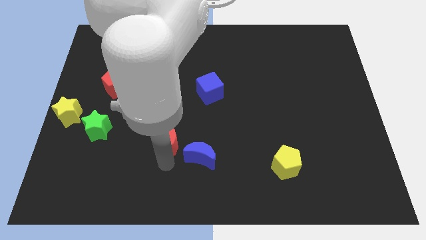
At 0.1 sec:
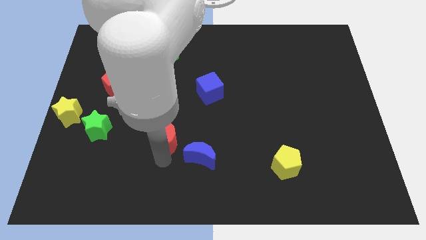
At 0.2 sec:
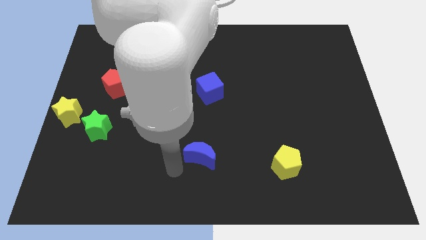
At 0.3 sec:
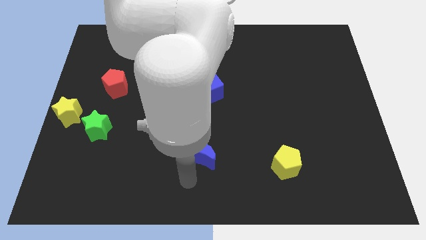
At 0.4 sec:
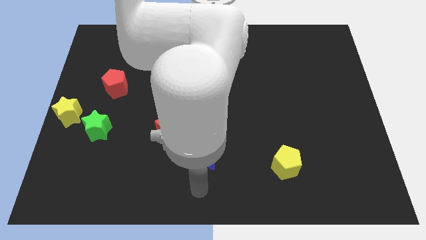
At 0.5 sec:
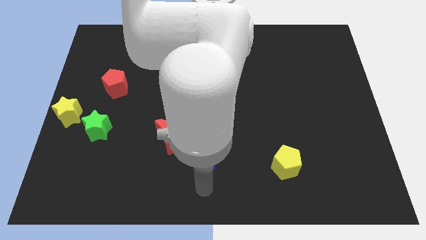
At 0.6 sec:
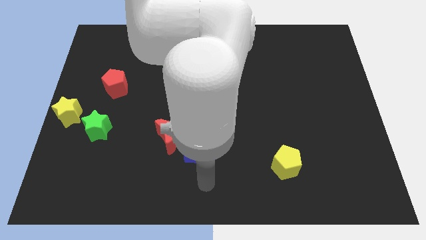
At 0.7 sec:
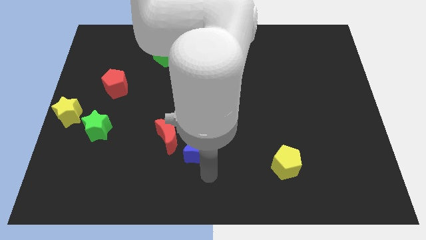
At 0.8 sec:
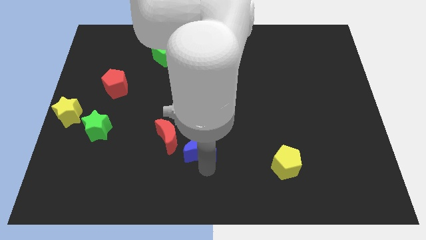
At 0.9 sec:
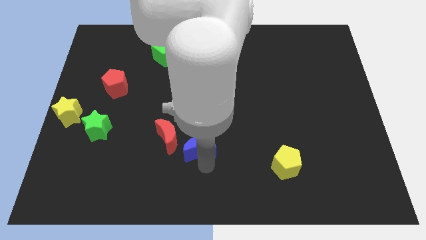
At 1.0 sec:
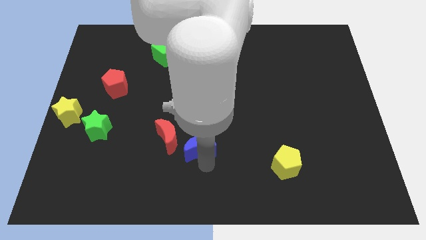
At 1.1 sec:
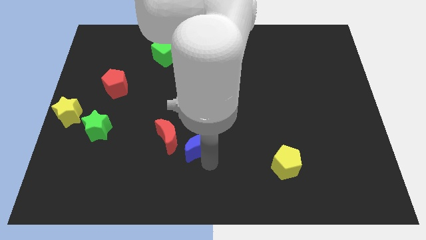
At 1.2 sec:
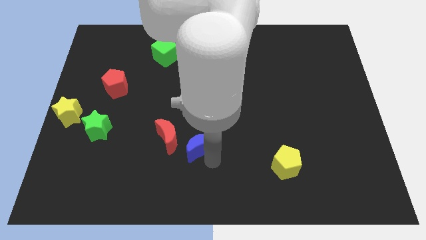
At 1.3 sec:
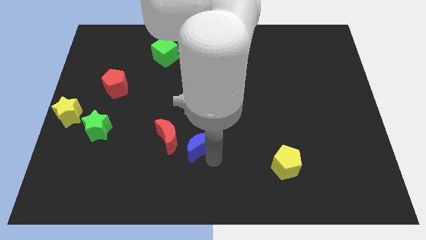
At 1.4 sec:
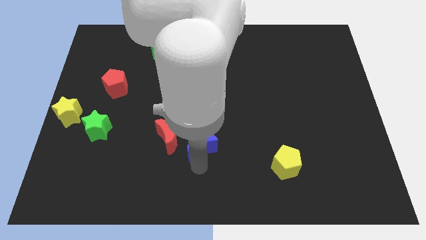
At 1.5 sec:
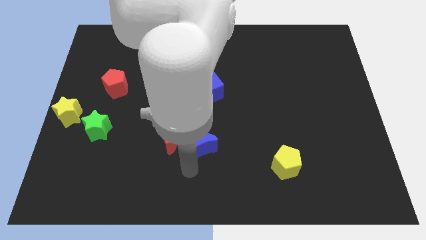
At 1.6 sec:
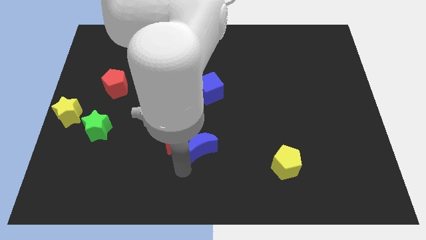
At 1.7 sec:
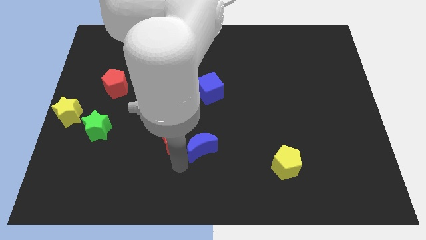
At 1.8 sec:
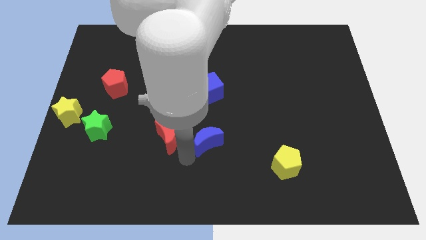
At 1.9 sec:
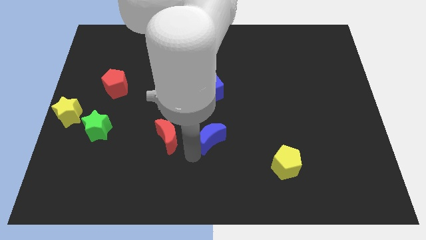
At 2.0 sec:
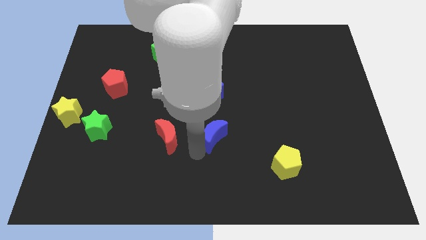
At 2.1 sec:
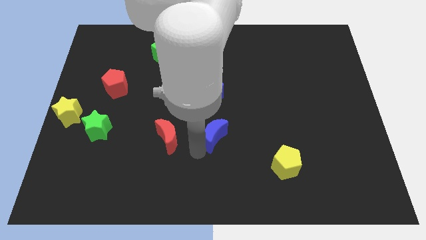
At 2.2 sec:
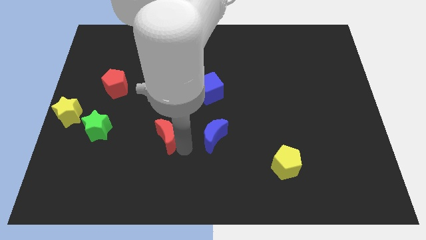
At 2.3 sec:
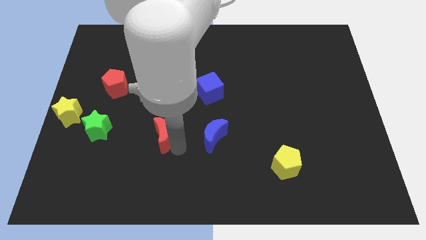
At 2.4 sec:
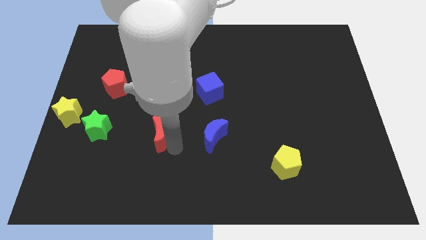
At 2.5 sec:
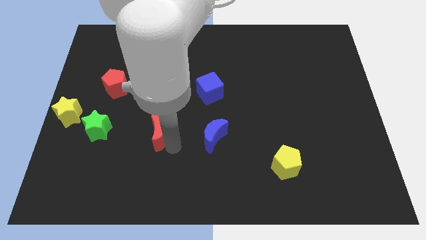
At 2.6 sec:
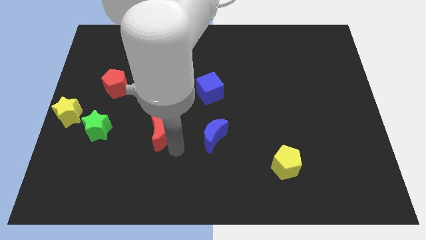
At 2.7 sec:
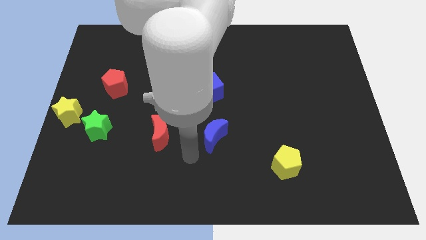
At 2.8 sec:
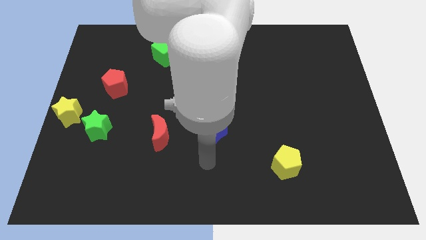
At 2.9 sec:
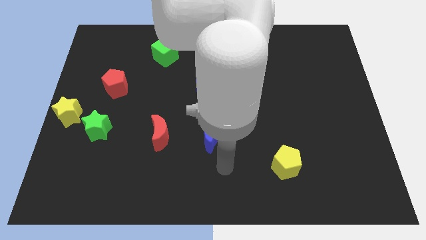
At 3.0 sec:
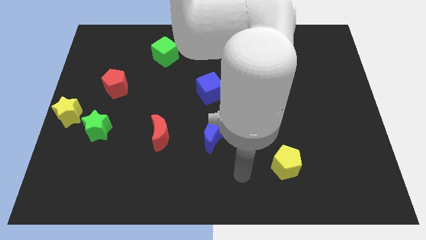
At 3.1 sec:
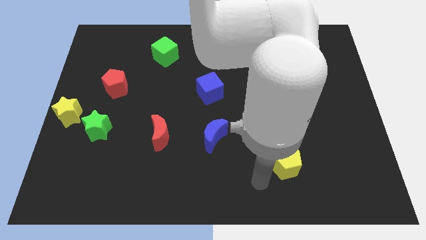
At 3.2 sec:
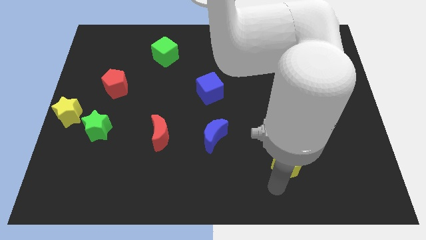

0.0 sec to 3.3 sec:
place the blue moon parallel to red moon

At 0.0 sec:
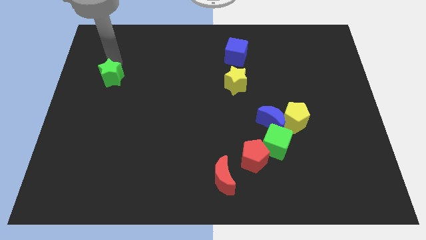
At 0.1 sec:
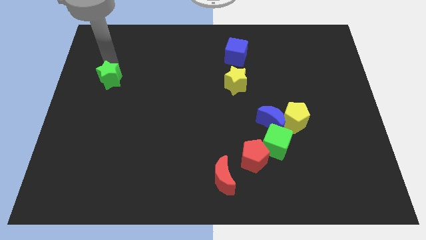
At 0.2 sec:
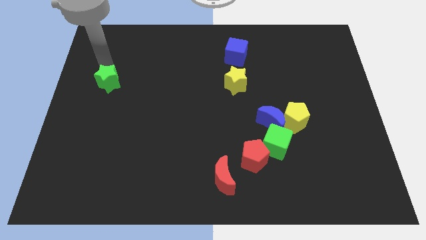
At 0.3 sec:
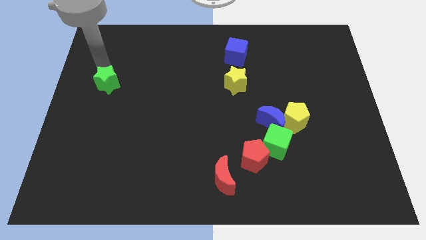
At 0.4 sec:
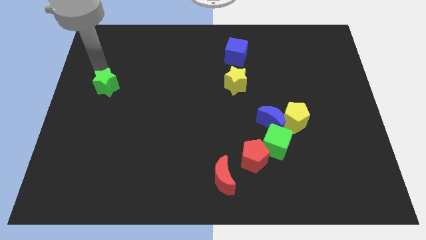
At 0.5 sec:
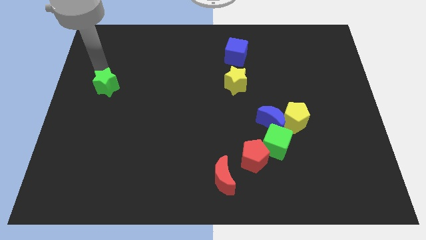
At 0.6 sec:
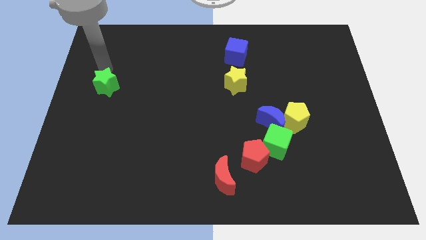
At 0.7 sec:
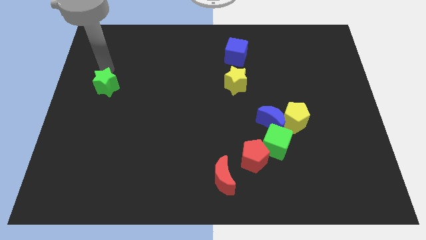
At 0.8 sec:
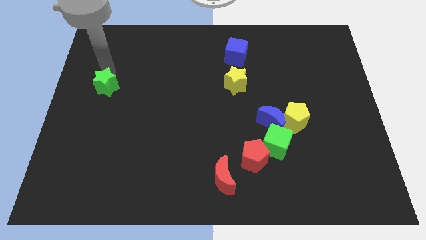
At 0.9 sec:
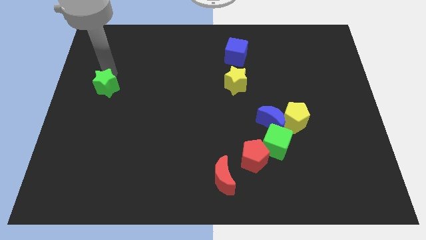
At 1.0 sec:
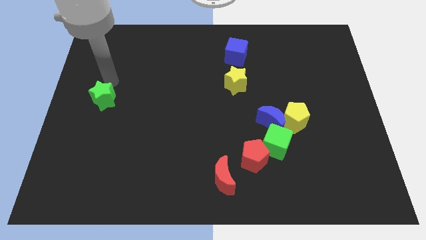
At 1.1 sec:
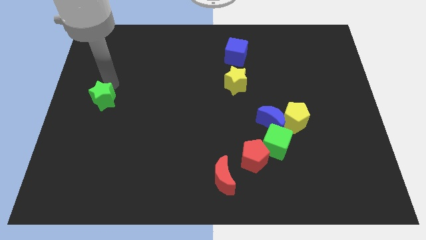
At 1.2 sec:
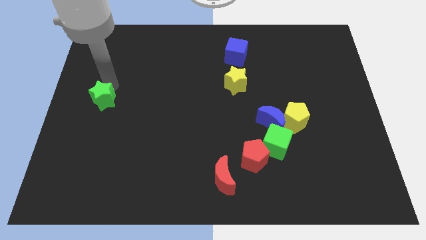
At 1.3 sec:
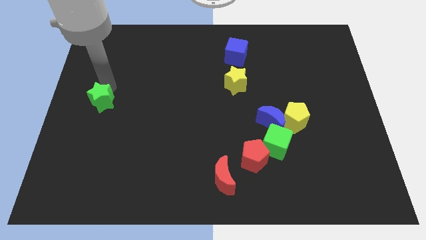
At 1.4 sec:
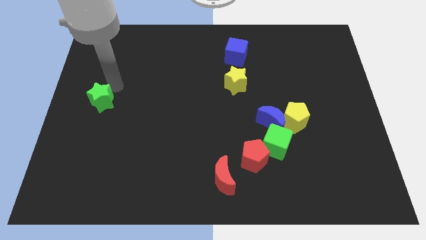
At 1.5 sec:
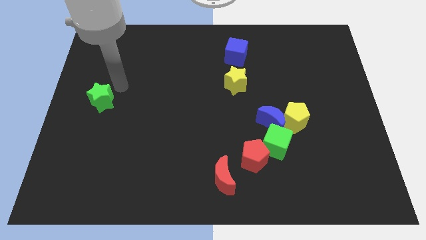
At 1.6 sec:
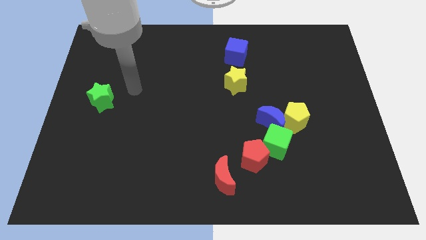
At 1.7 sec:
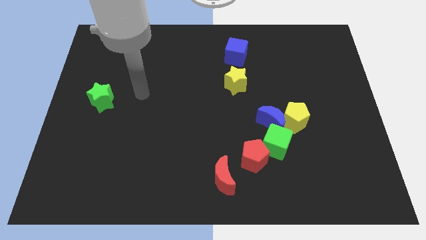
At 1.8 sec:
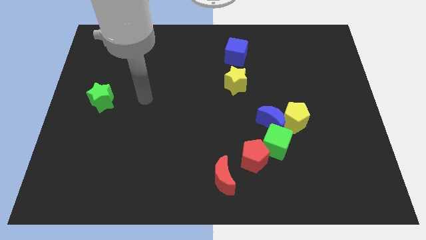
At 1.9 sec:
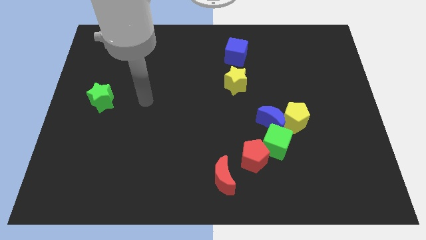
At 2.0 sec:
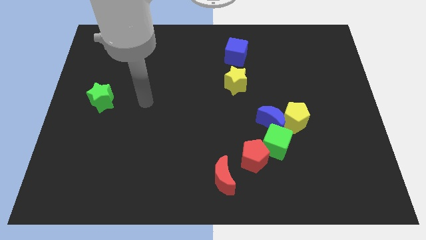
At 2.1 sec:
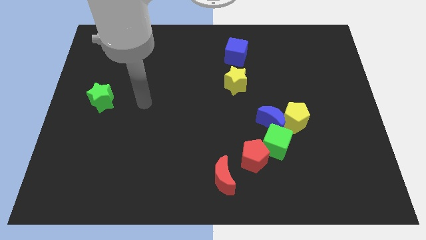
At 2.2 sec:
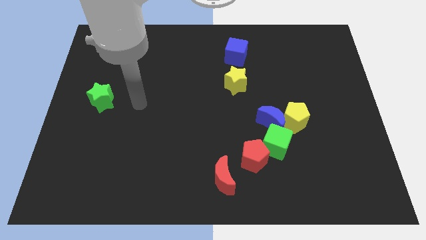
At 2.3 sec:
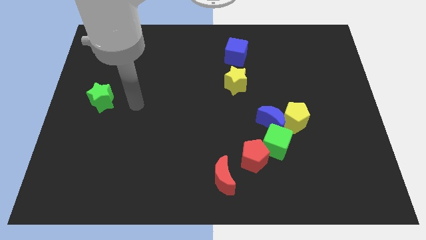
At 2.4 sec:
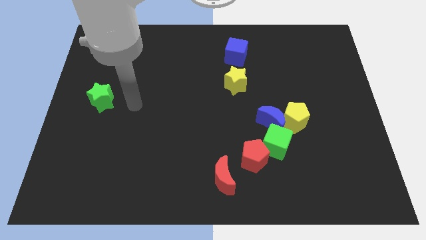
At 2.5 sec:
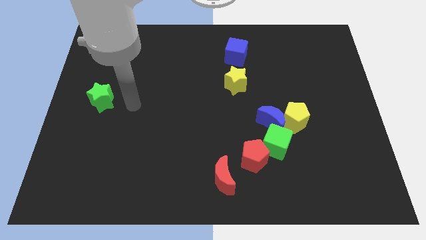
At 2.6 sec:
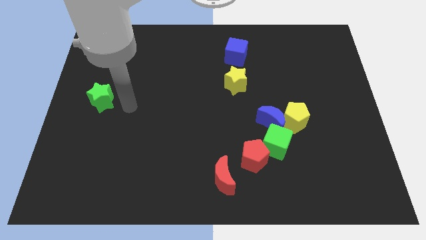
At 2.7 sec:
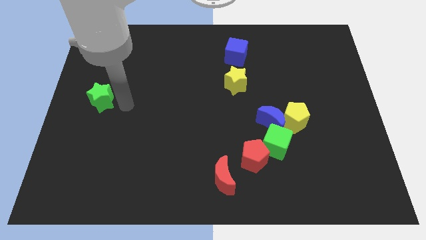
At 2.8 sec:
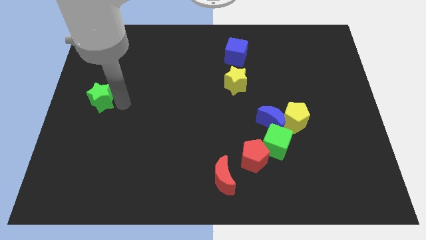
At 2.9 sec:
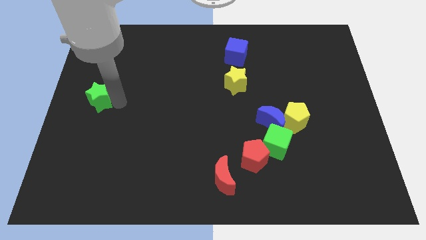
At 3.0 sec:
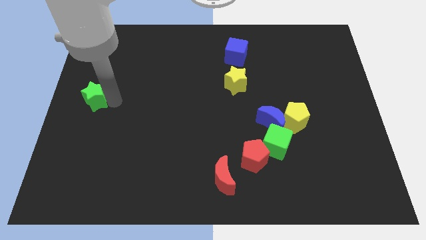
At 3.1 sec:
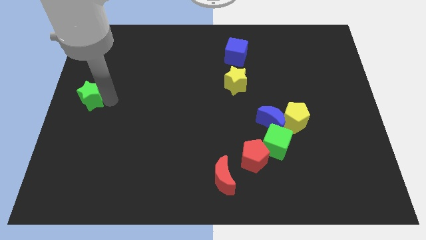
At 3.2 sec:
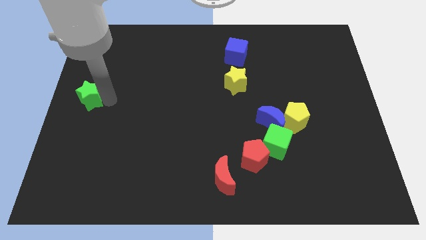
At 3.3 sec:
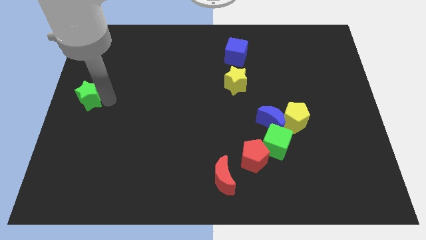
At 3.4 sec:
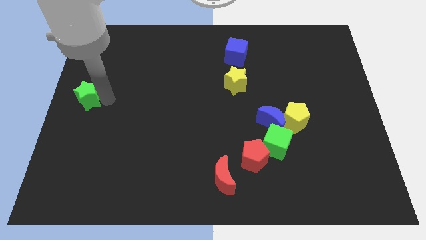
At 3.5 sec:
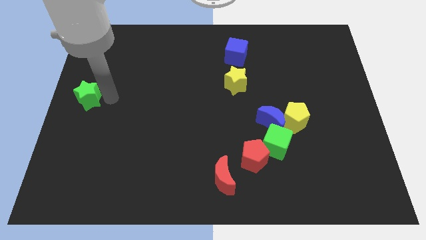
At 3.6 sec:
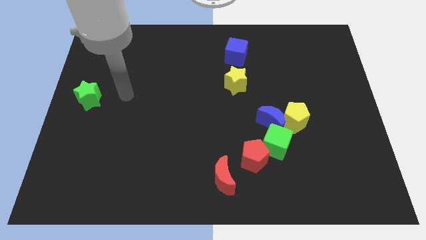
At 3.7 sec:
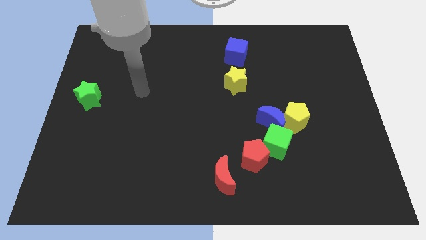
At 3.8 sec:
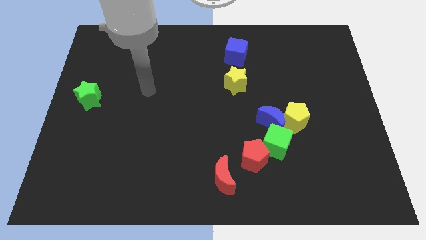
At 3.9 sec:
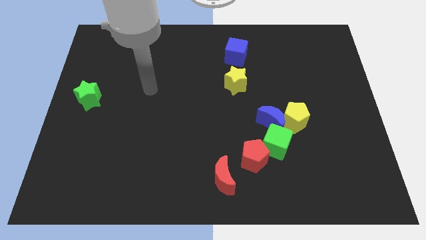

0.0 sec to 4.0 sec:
move the green star at the center left side

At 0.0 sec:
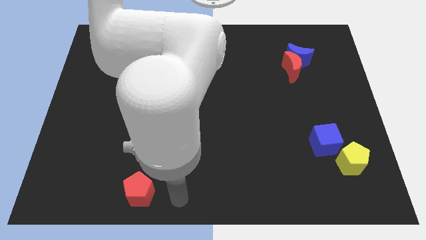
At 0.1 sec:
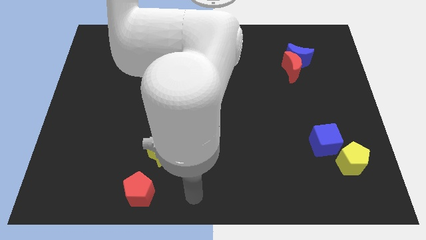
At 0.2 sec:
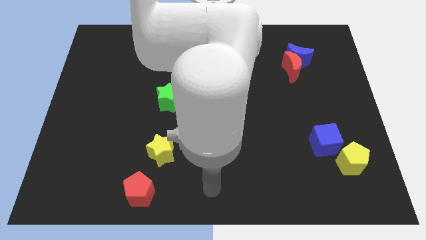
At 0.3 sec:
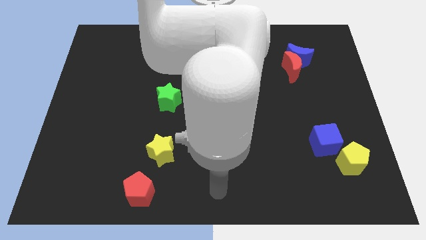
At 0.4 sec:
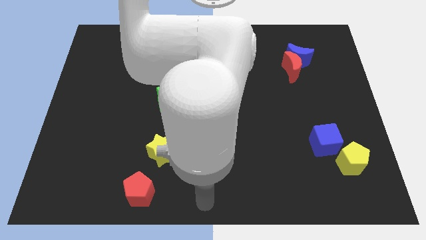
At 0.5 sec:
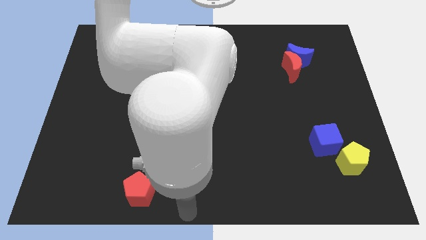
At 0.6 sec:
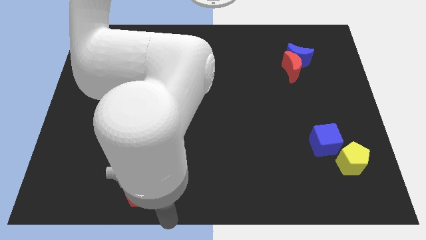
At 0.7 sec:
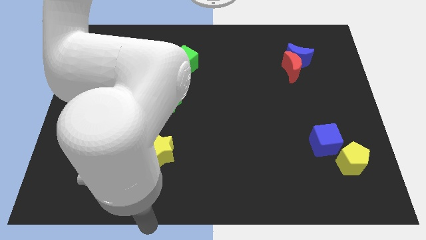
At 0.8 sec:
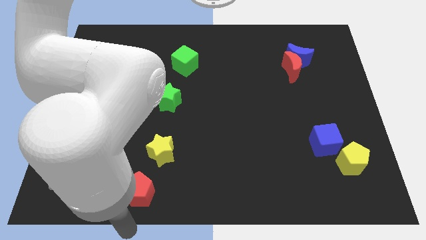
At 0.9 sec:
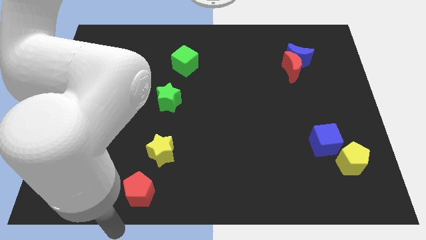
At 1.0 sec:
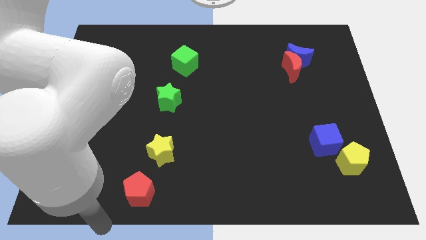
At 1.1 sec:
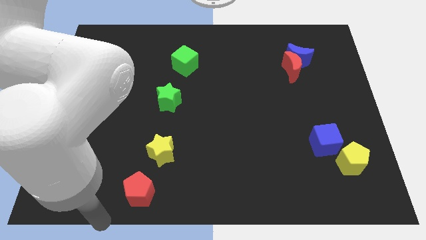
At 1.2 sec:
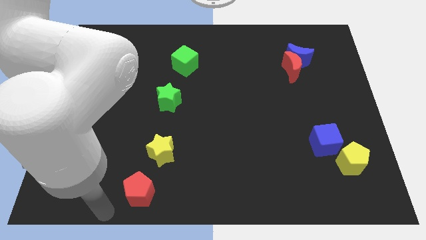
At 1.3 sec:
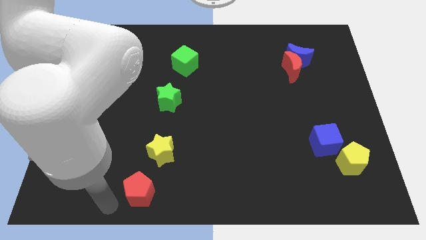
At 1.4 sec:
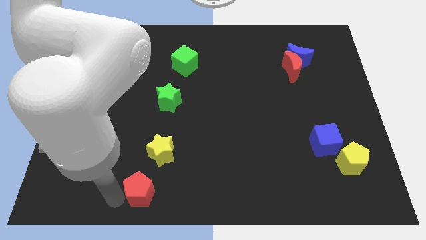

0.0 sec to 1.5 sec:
move your arm to the left of red pentagon

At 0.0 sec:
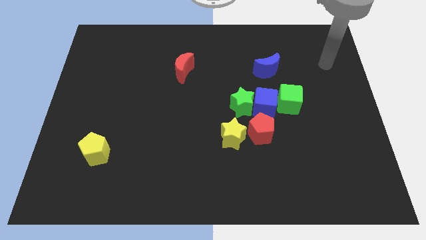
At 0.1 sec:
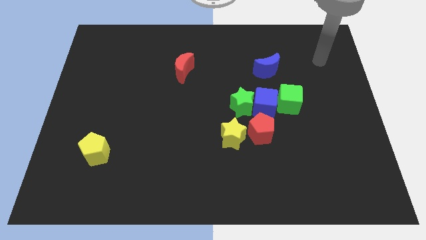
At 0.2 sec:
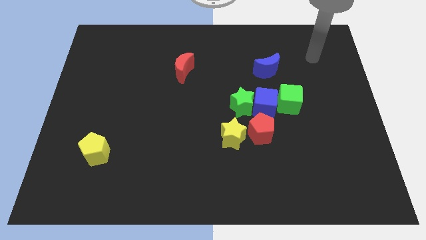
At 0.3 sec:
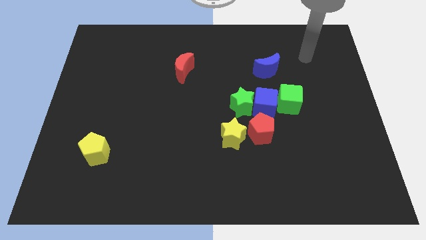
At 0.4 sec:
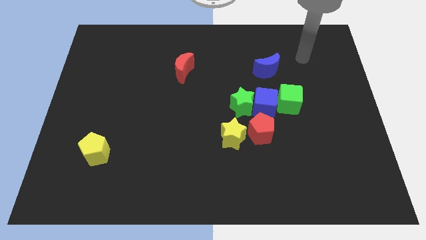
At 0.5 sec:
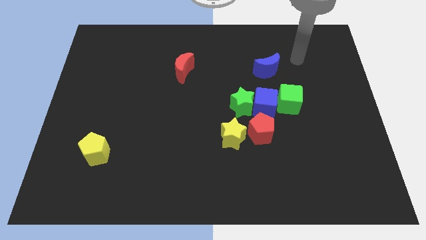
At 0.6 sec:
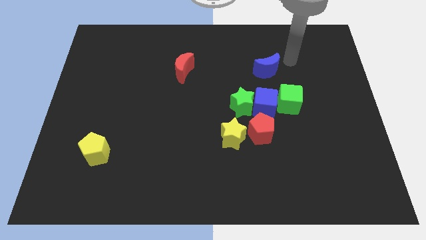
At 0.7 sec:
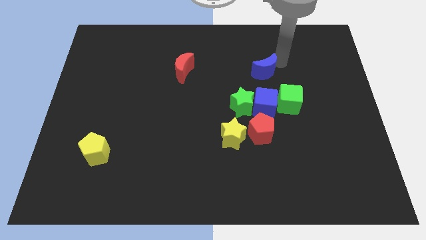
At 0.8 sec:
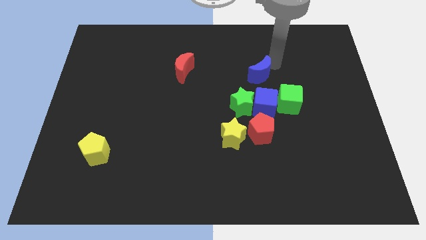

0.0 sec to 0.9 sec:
point your arm above blue moon
